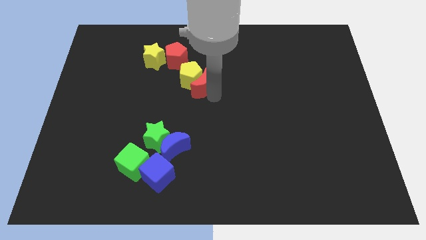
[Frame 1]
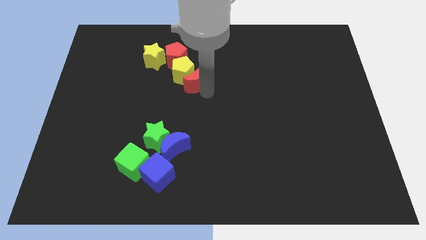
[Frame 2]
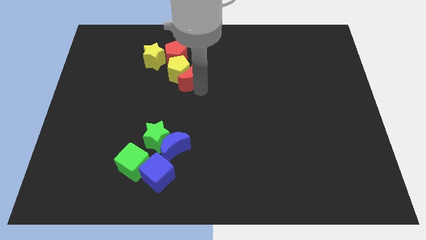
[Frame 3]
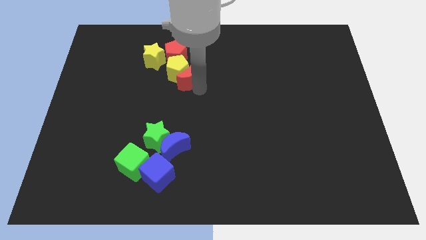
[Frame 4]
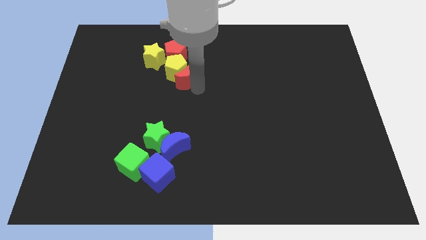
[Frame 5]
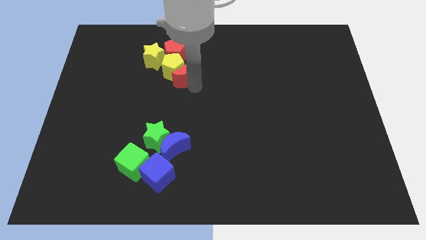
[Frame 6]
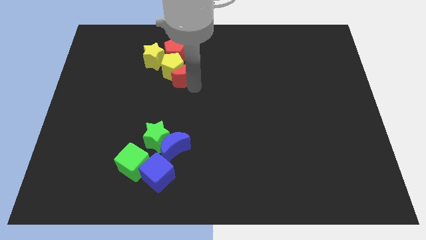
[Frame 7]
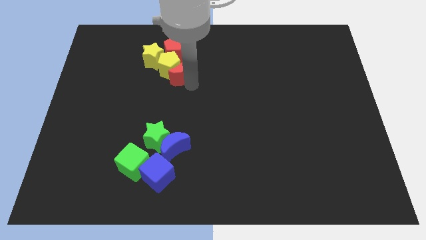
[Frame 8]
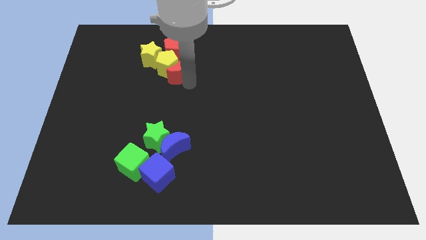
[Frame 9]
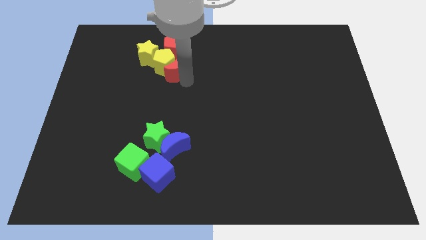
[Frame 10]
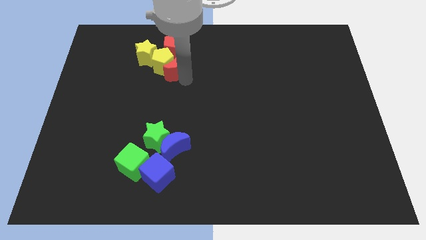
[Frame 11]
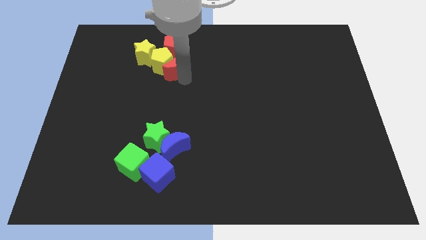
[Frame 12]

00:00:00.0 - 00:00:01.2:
slide the red crescent and yellow pentagon together towards the yellow star

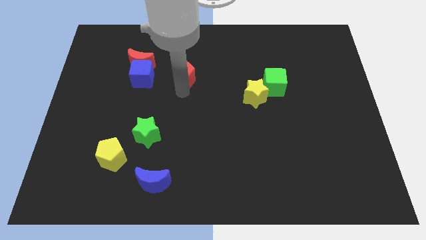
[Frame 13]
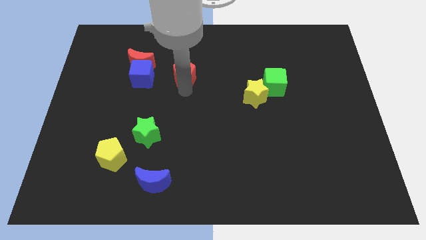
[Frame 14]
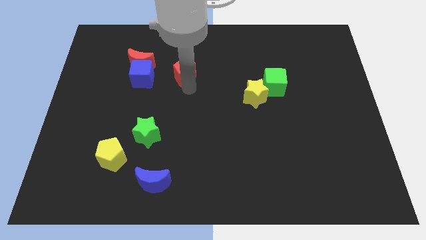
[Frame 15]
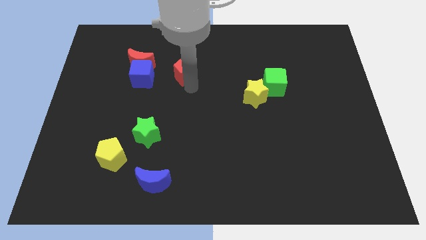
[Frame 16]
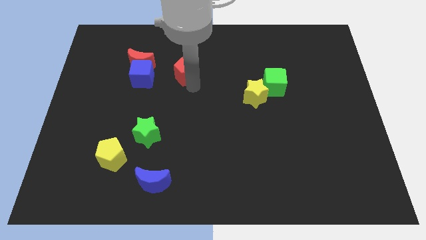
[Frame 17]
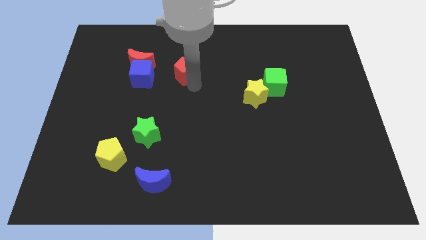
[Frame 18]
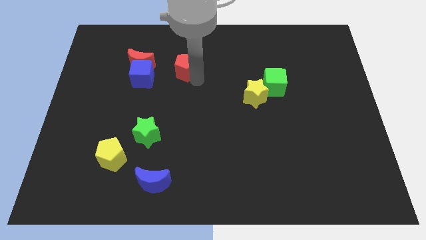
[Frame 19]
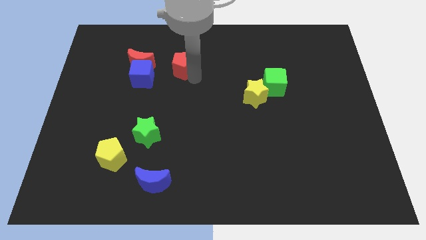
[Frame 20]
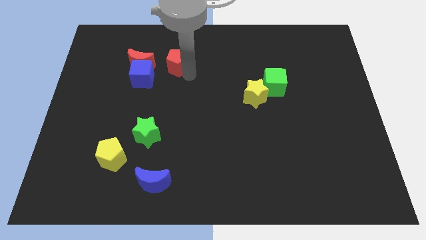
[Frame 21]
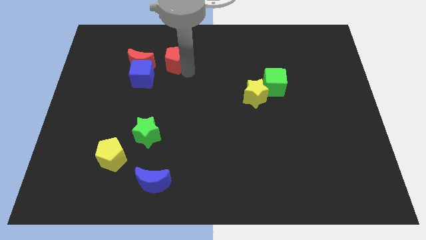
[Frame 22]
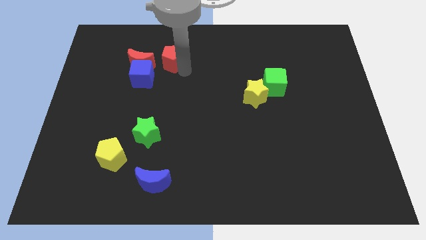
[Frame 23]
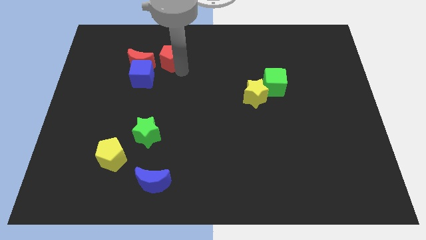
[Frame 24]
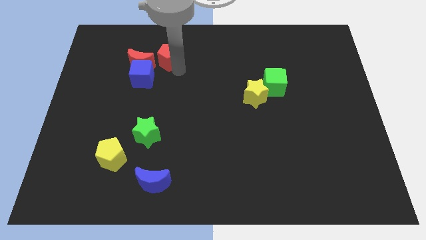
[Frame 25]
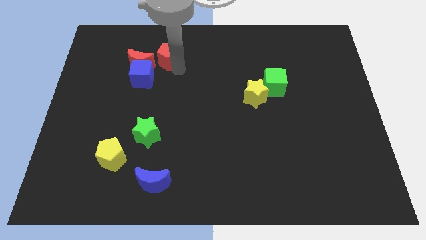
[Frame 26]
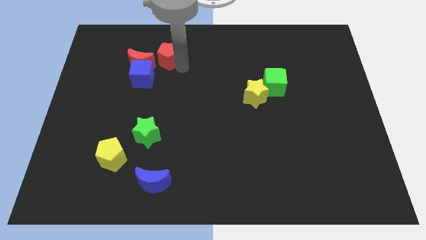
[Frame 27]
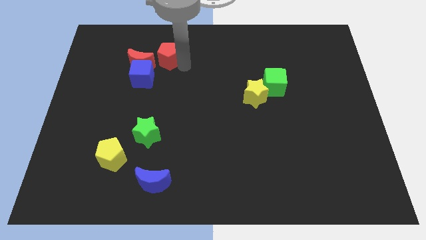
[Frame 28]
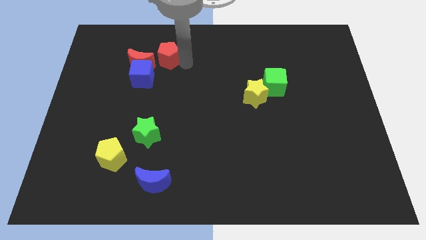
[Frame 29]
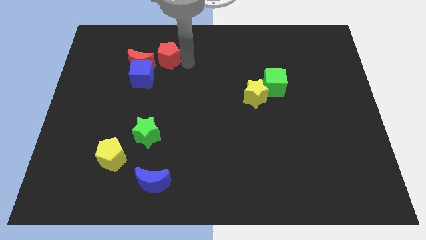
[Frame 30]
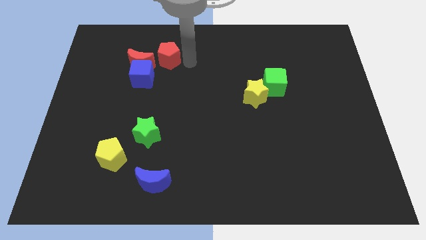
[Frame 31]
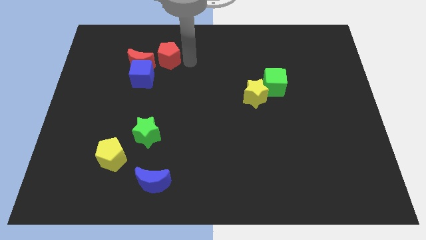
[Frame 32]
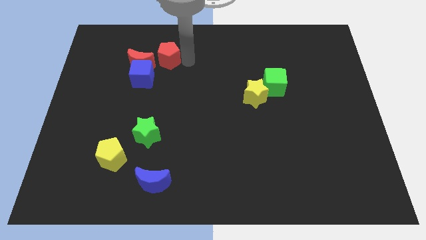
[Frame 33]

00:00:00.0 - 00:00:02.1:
push the red pentagon close to the red crescent

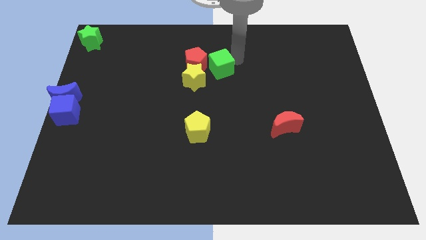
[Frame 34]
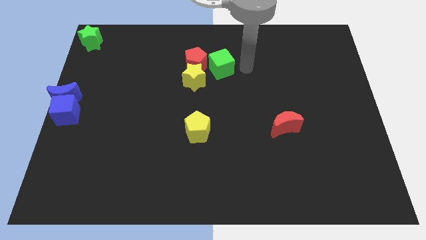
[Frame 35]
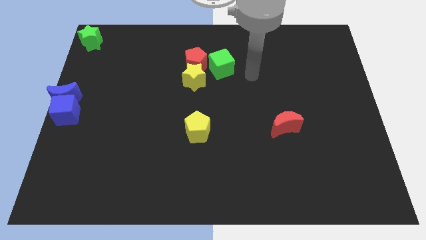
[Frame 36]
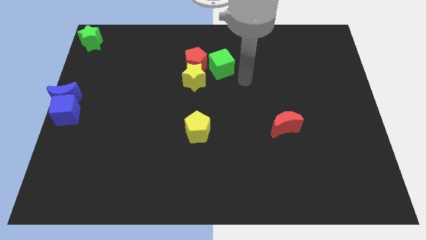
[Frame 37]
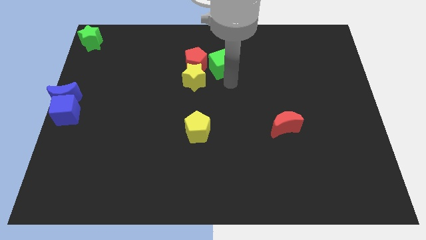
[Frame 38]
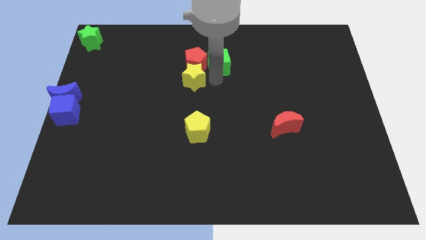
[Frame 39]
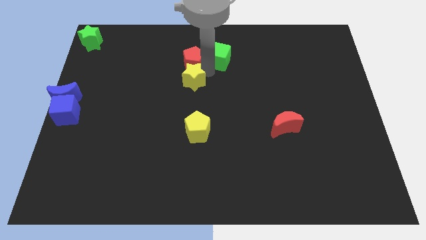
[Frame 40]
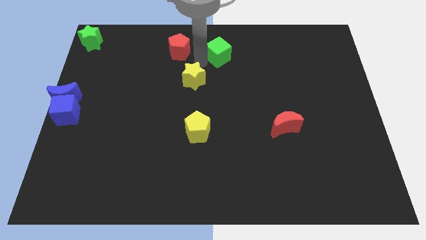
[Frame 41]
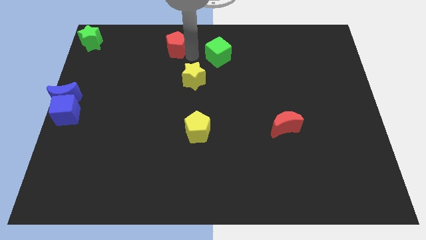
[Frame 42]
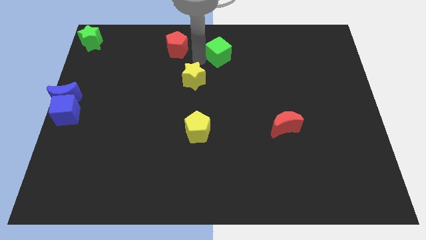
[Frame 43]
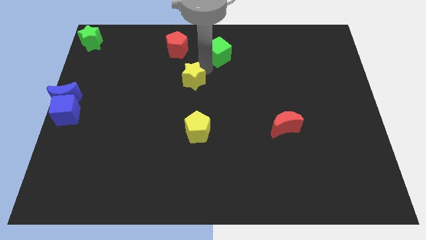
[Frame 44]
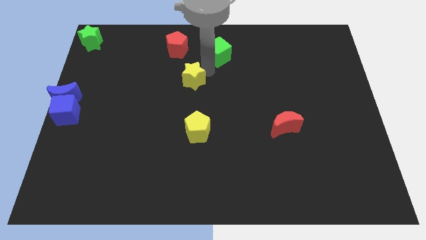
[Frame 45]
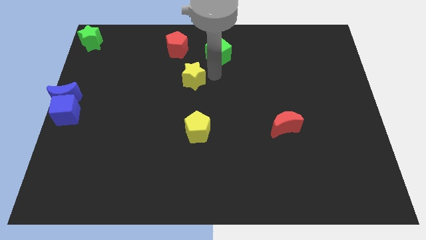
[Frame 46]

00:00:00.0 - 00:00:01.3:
push the red pentagon away from the green cube and yellow star

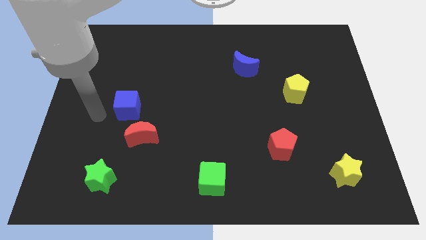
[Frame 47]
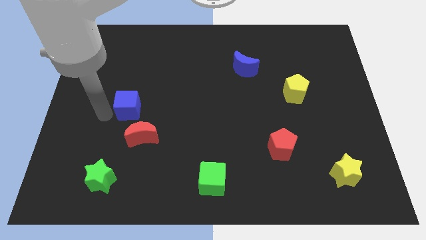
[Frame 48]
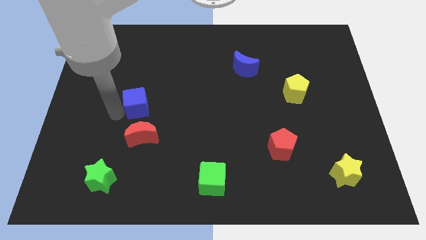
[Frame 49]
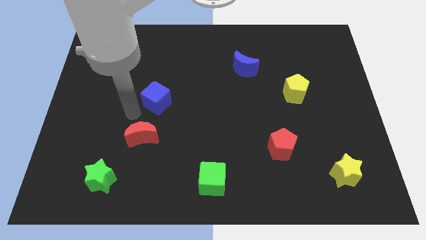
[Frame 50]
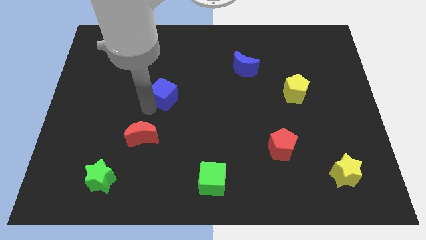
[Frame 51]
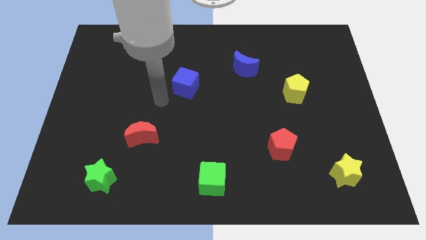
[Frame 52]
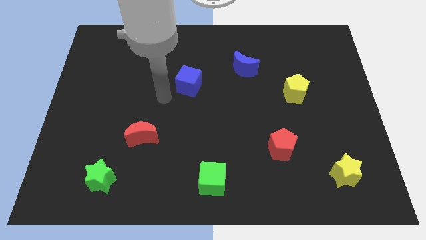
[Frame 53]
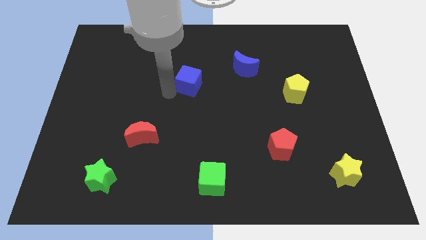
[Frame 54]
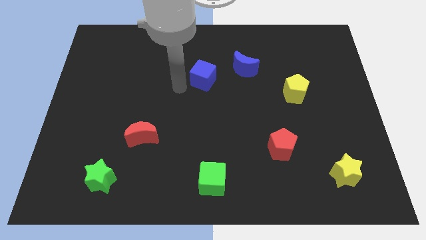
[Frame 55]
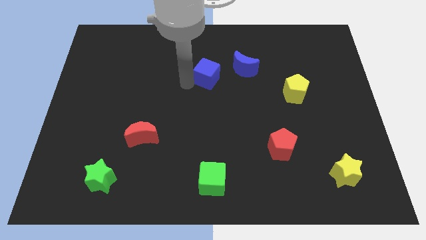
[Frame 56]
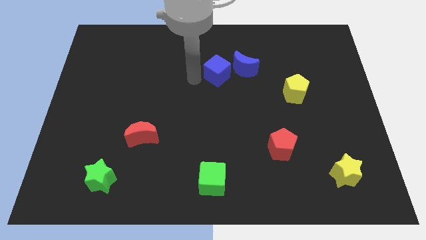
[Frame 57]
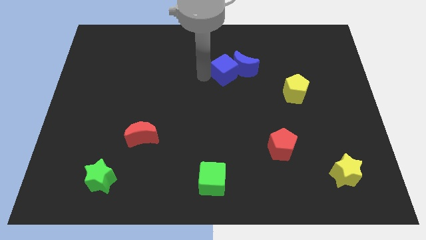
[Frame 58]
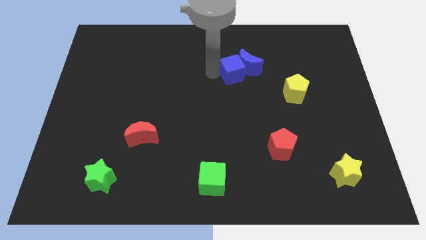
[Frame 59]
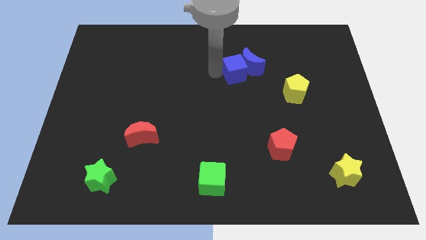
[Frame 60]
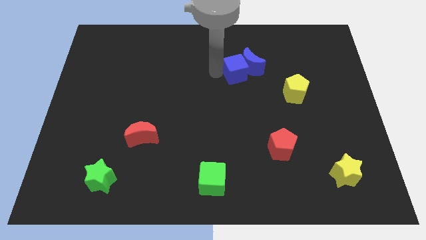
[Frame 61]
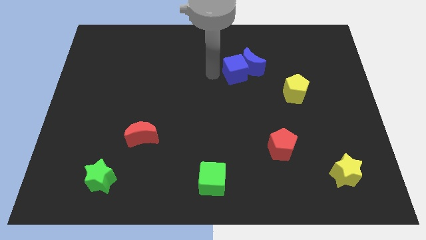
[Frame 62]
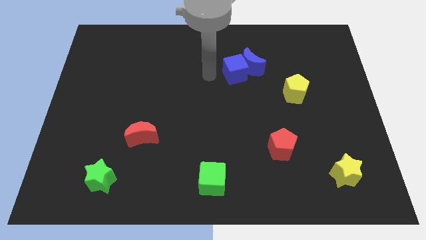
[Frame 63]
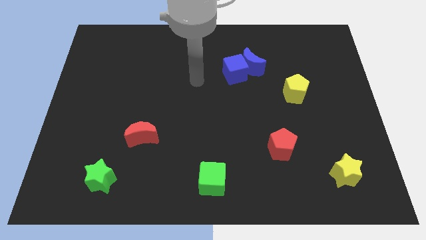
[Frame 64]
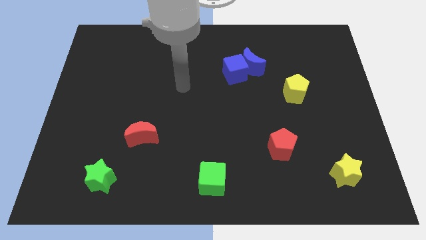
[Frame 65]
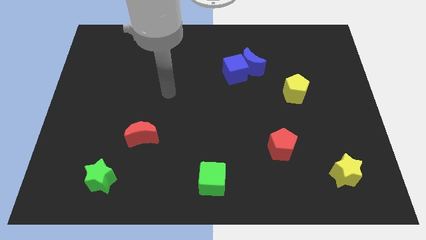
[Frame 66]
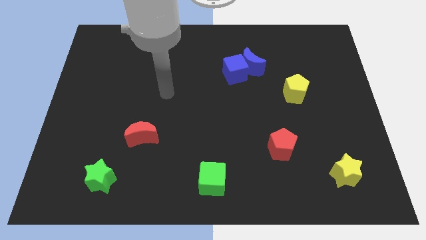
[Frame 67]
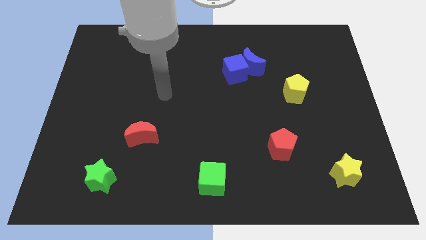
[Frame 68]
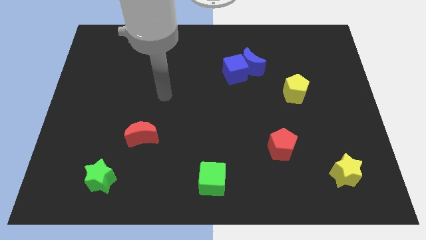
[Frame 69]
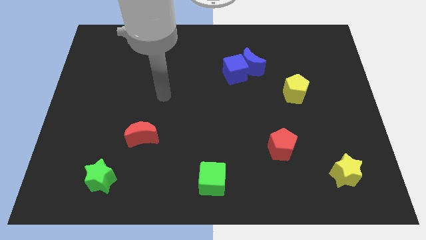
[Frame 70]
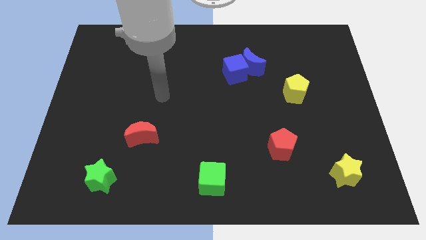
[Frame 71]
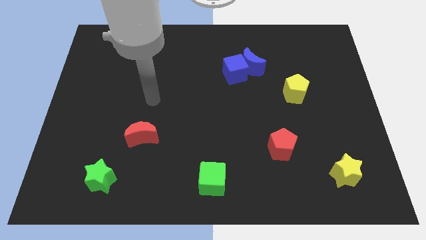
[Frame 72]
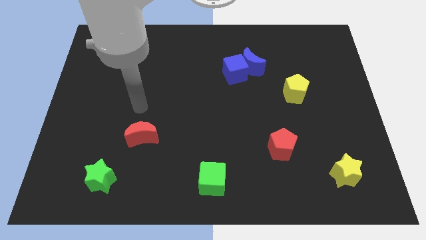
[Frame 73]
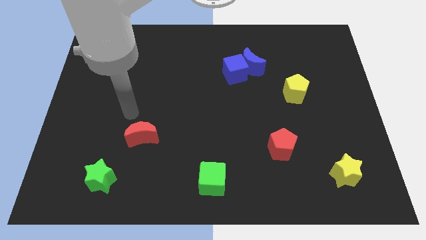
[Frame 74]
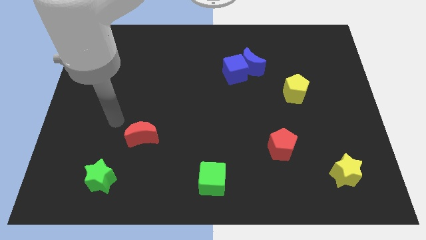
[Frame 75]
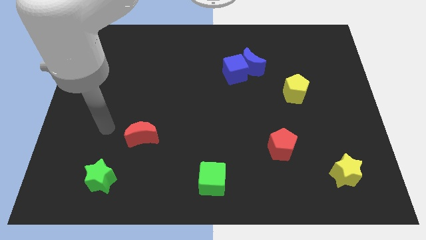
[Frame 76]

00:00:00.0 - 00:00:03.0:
move the blue cube into the blue crescent

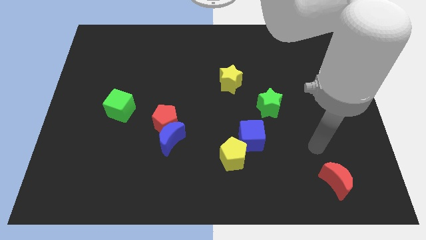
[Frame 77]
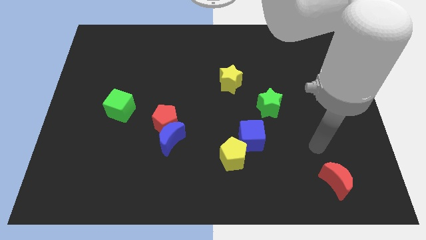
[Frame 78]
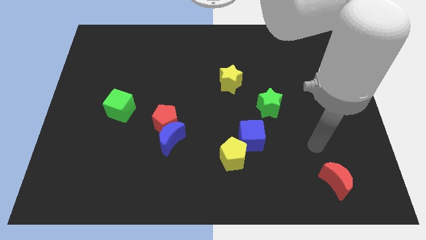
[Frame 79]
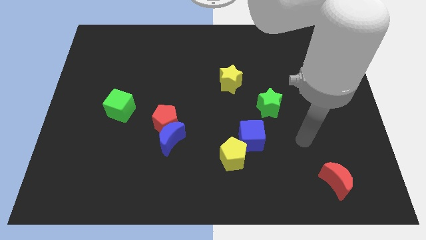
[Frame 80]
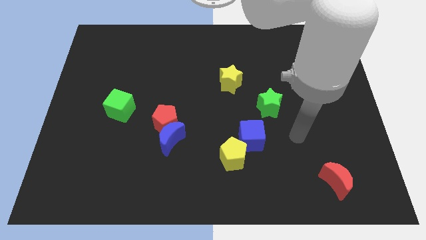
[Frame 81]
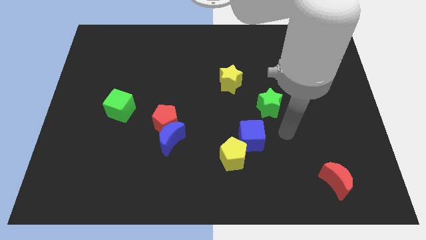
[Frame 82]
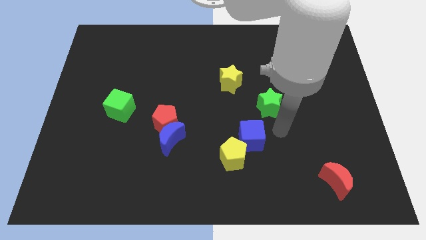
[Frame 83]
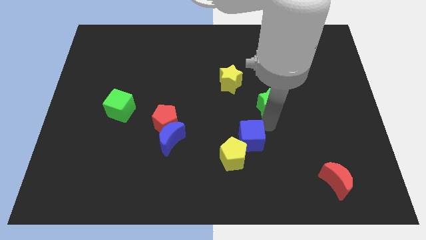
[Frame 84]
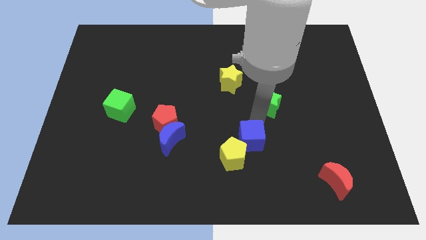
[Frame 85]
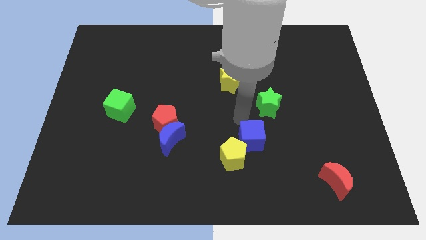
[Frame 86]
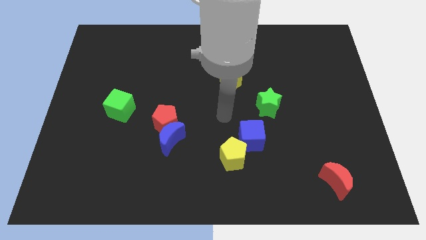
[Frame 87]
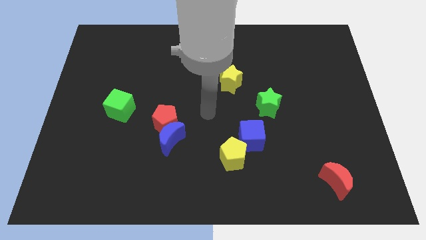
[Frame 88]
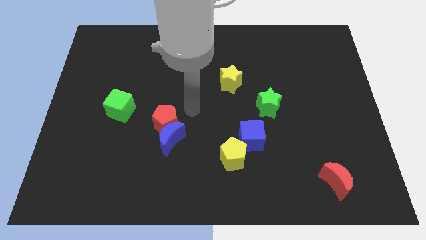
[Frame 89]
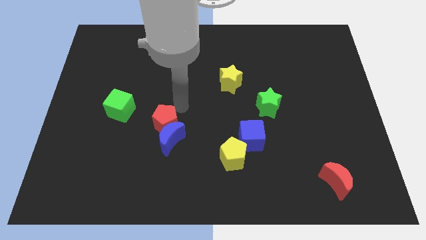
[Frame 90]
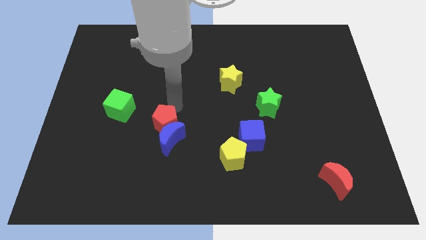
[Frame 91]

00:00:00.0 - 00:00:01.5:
move your arm close to the red pentagon
